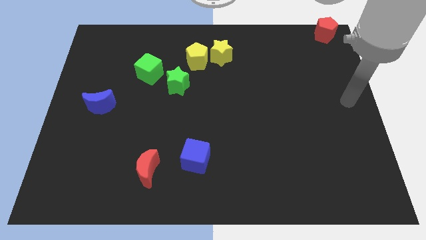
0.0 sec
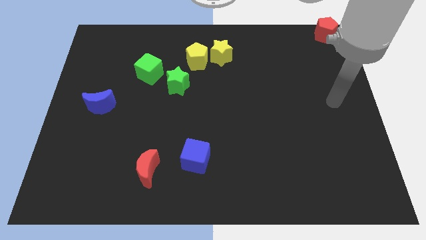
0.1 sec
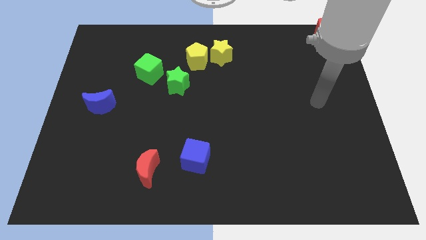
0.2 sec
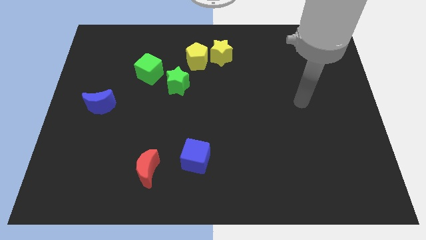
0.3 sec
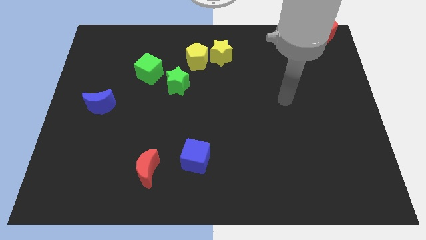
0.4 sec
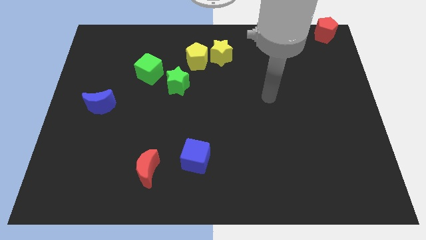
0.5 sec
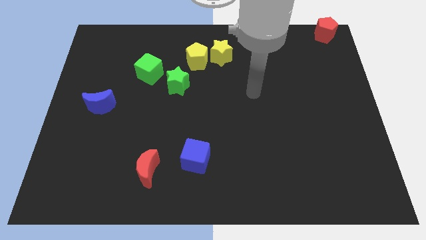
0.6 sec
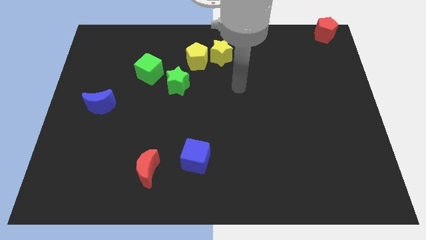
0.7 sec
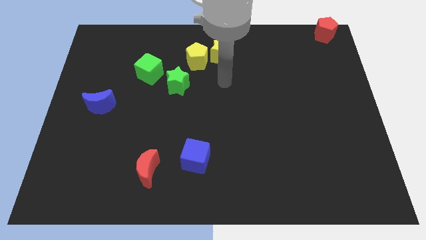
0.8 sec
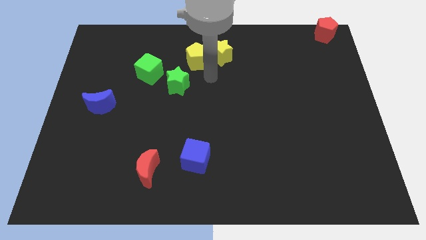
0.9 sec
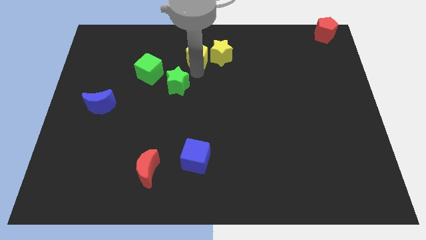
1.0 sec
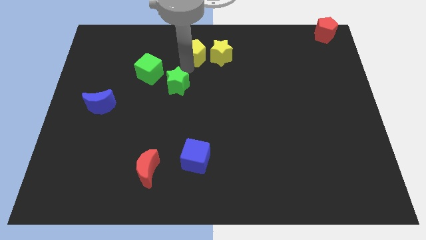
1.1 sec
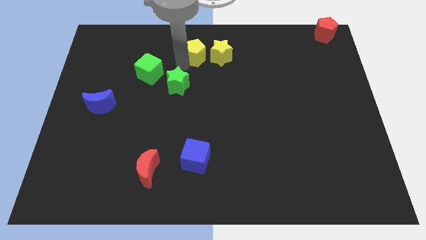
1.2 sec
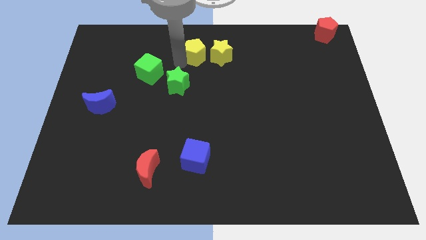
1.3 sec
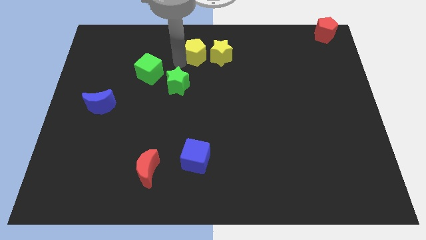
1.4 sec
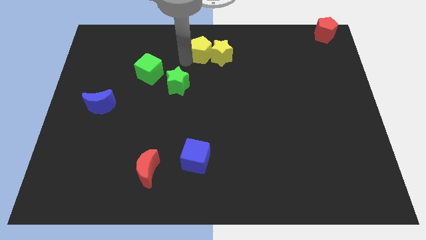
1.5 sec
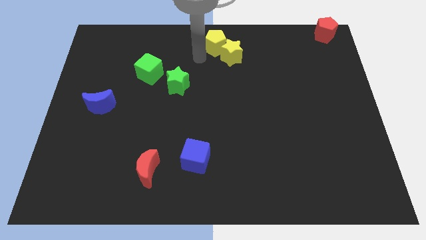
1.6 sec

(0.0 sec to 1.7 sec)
push the yellow pentagon into yellow star

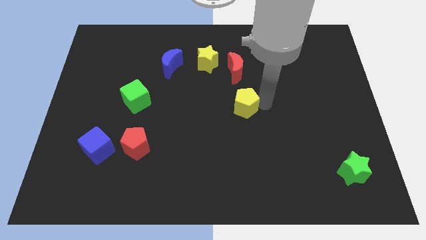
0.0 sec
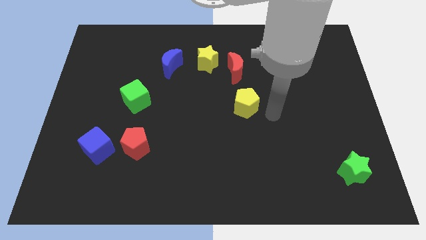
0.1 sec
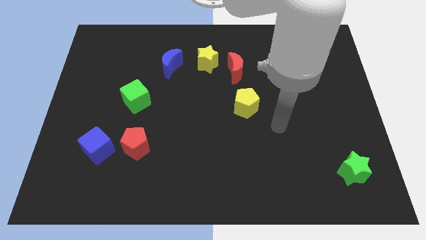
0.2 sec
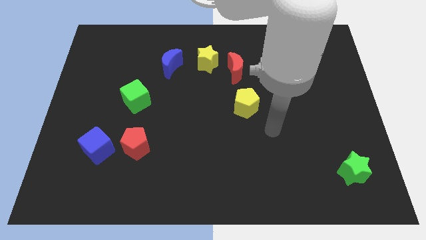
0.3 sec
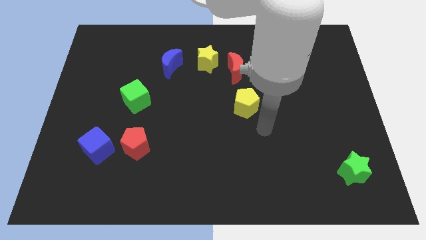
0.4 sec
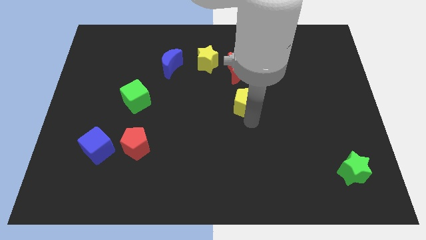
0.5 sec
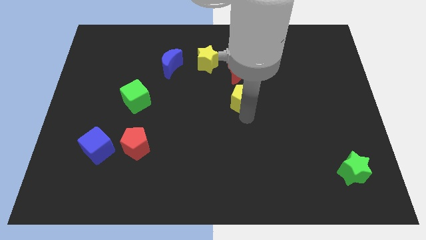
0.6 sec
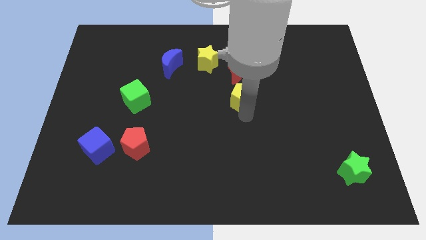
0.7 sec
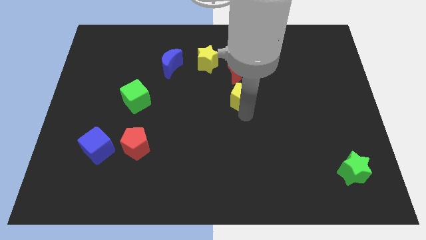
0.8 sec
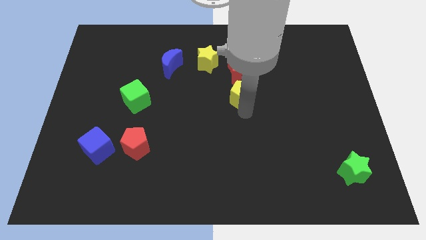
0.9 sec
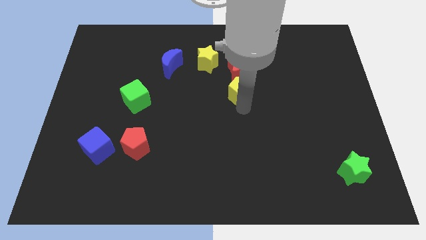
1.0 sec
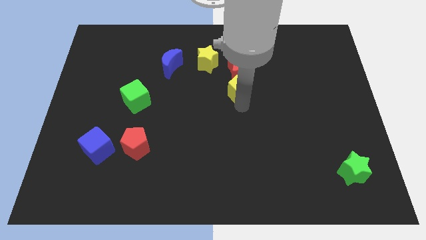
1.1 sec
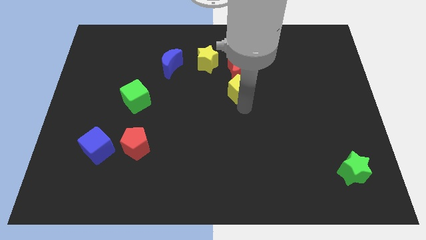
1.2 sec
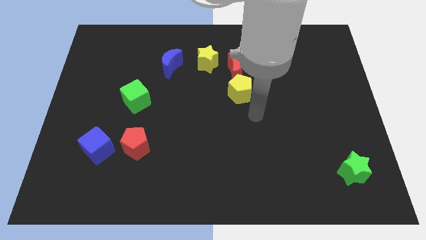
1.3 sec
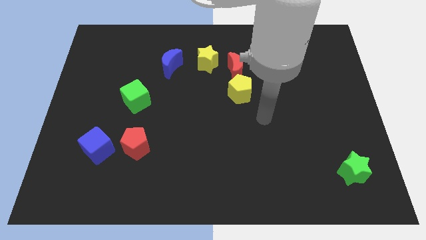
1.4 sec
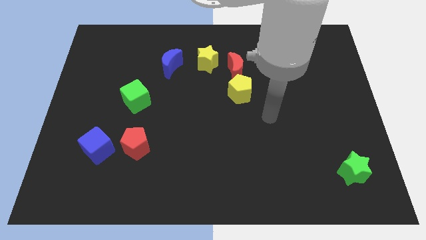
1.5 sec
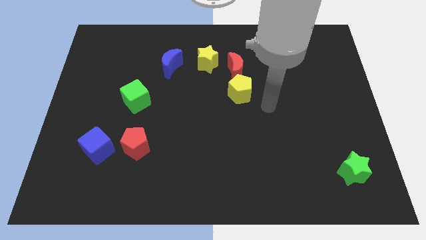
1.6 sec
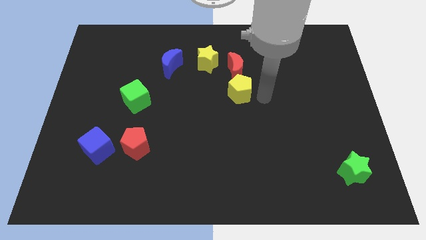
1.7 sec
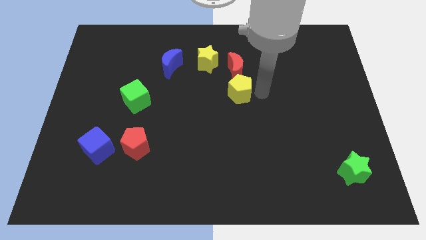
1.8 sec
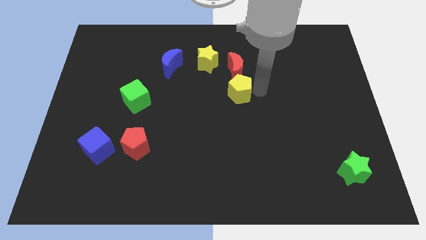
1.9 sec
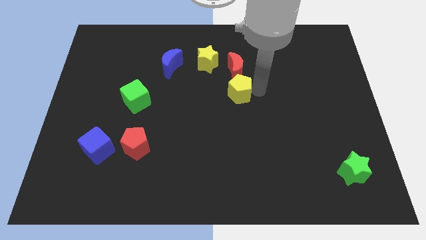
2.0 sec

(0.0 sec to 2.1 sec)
push the yellow pentagon into the red moon

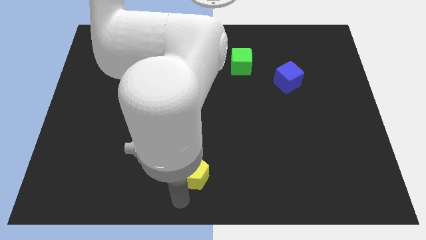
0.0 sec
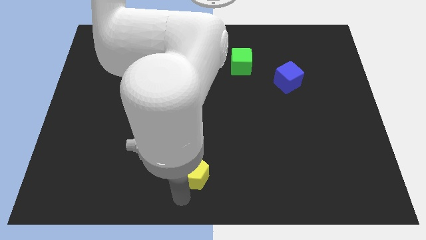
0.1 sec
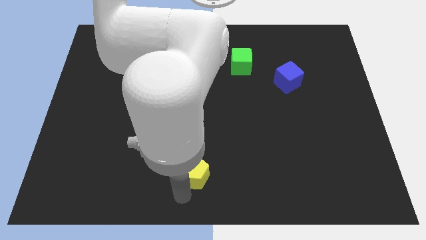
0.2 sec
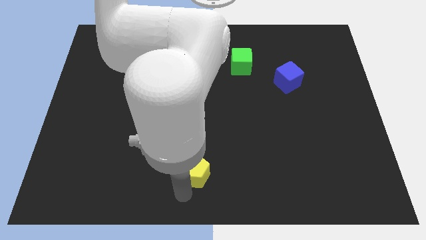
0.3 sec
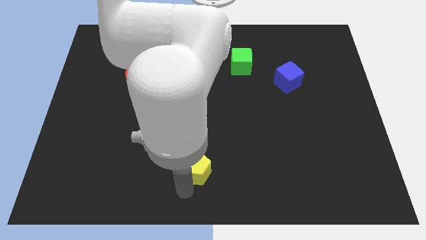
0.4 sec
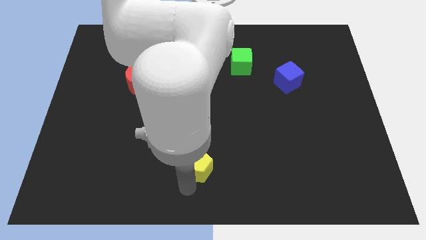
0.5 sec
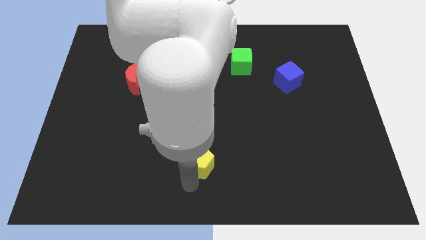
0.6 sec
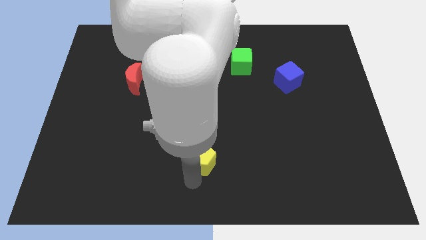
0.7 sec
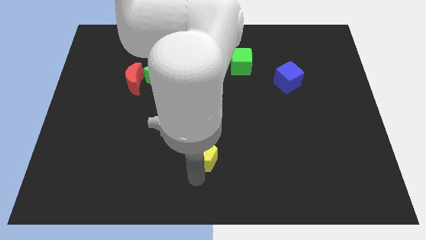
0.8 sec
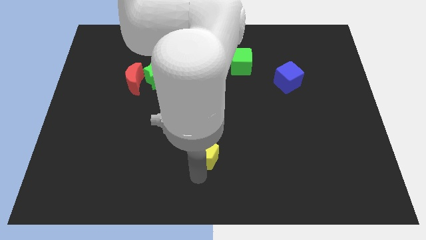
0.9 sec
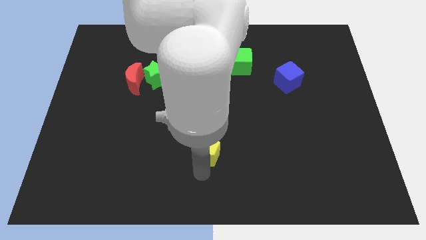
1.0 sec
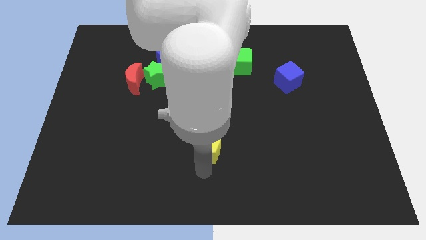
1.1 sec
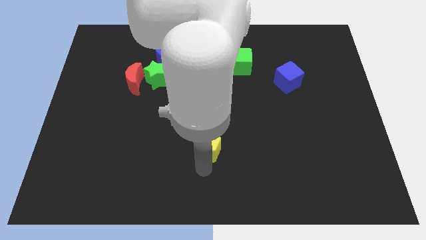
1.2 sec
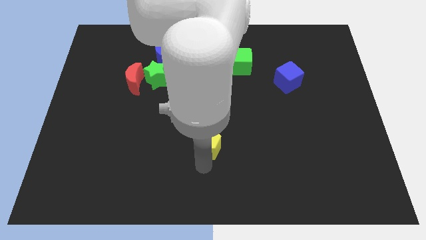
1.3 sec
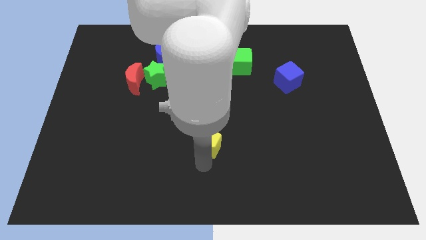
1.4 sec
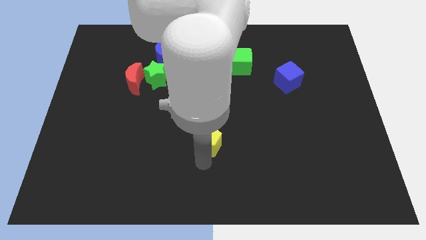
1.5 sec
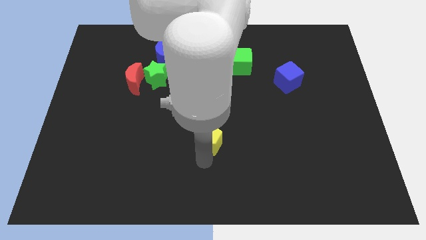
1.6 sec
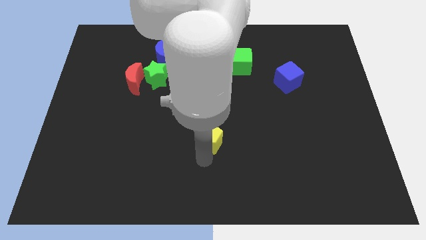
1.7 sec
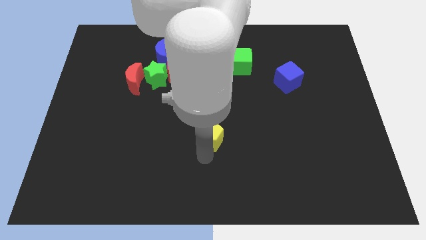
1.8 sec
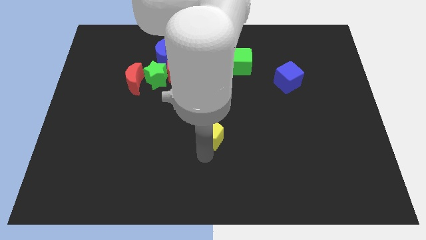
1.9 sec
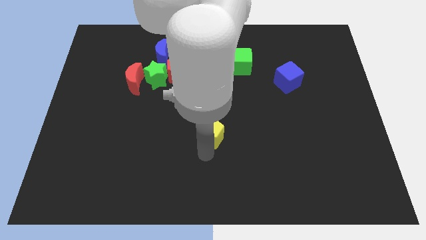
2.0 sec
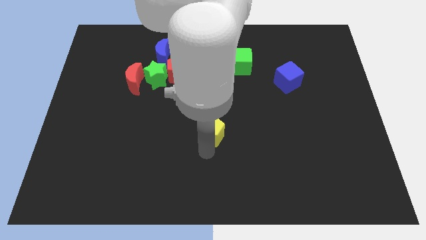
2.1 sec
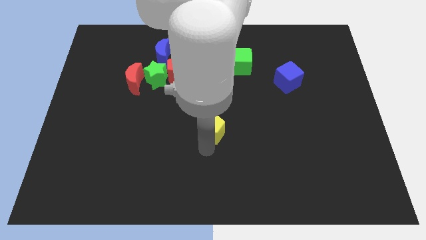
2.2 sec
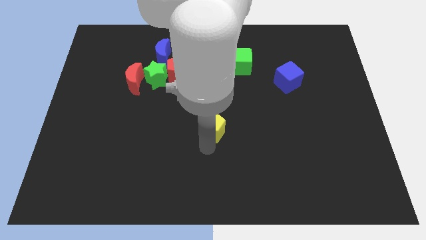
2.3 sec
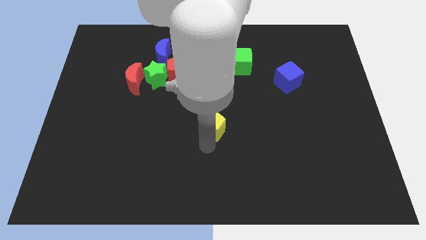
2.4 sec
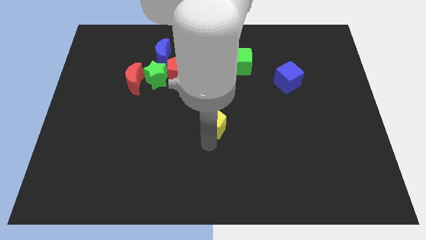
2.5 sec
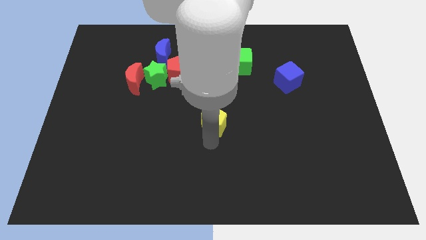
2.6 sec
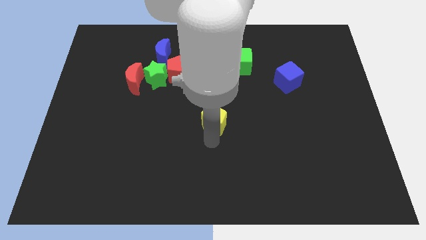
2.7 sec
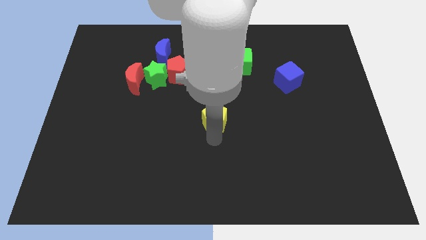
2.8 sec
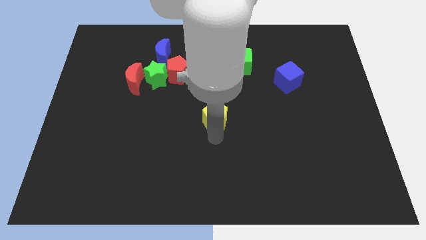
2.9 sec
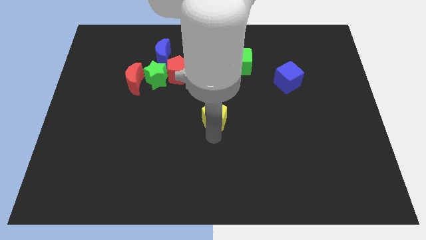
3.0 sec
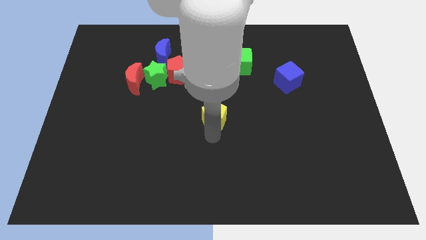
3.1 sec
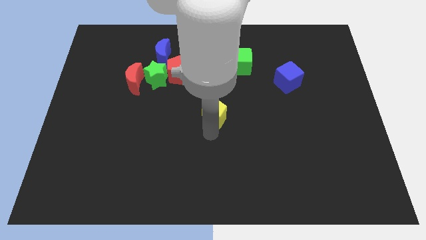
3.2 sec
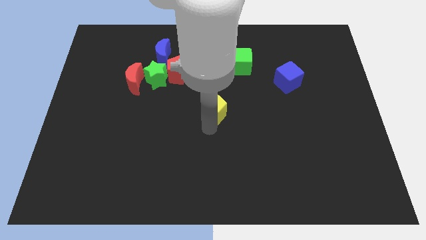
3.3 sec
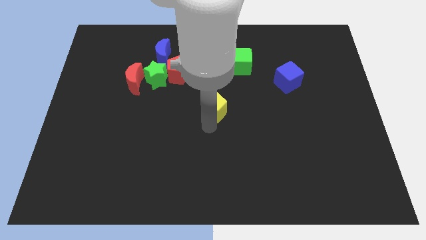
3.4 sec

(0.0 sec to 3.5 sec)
put the yellow pentagon to the center of the board

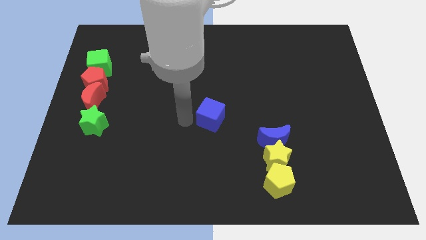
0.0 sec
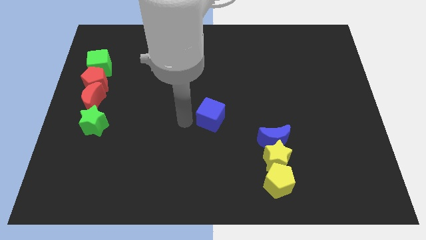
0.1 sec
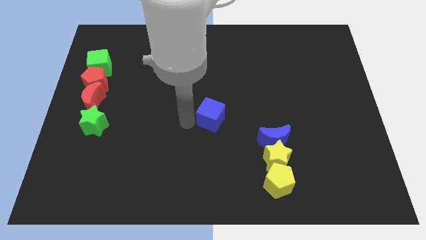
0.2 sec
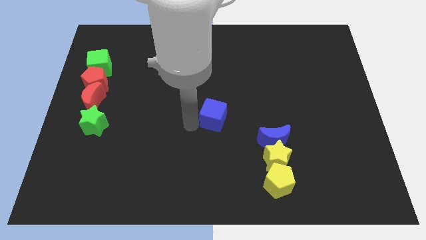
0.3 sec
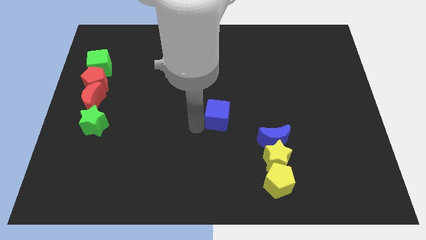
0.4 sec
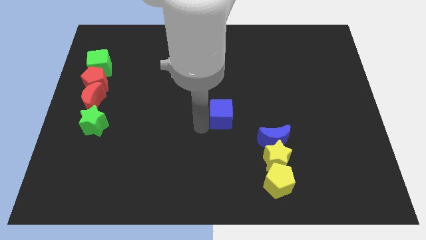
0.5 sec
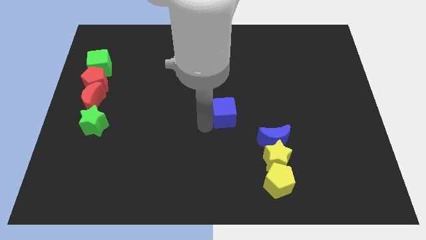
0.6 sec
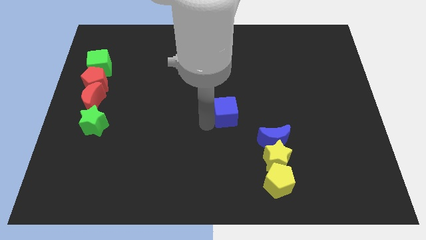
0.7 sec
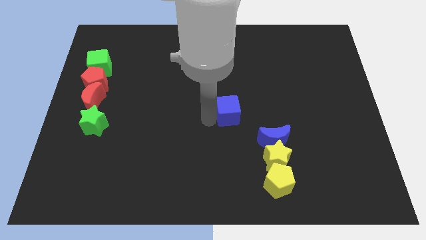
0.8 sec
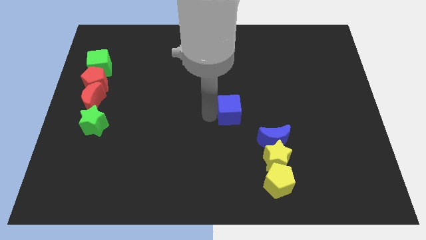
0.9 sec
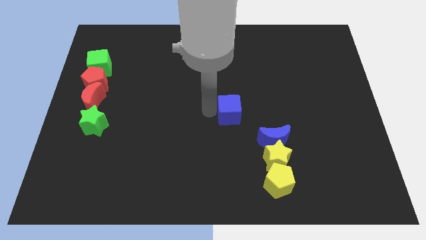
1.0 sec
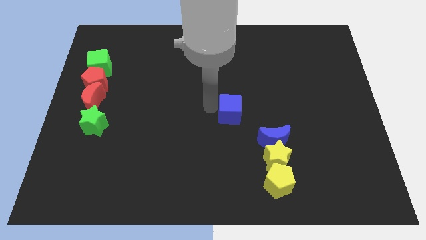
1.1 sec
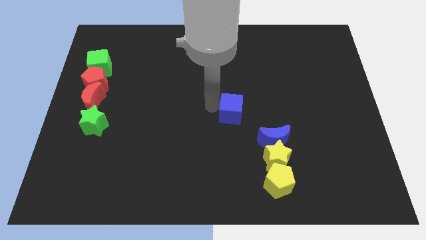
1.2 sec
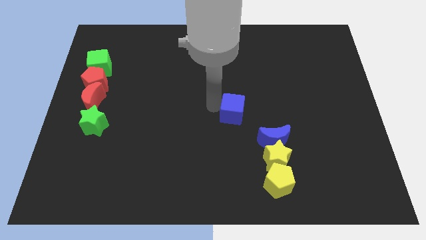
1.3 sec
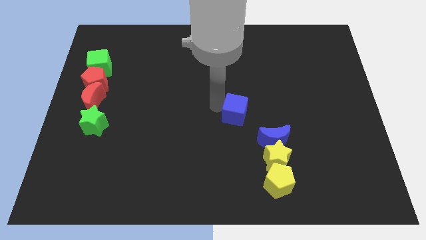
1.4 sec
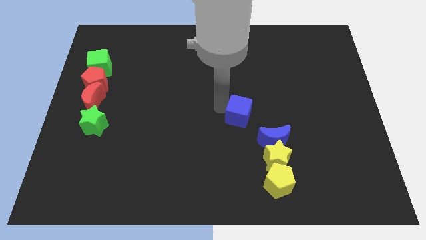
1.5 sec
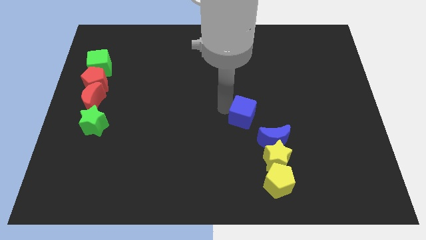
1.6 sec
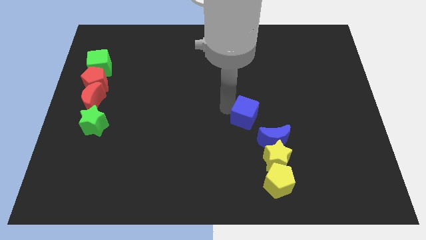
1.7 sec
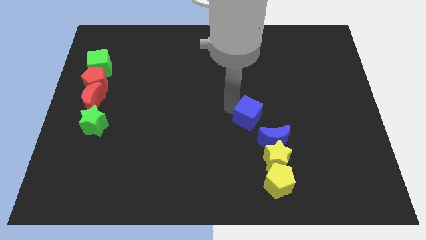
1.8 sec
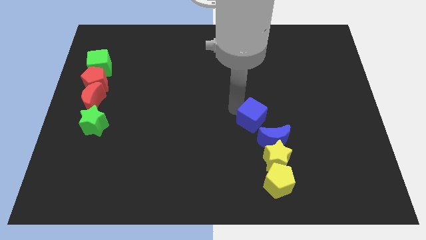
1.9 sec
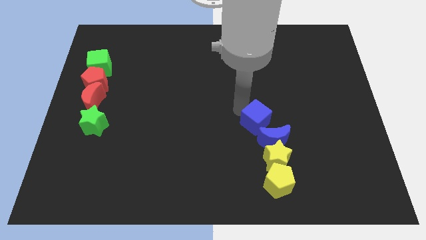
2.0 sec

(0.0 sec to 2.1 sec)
slide the blue cube at the left of the blue crescent
